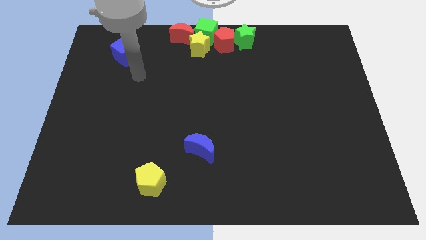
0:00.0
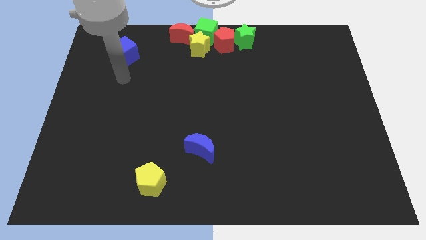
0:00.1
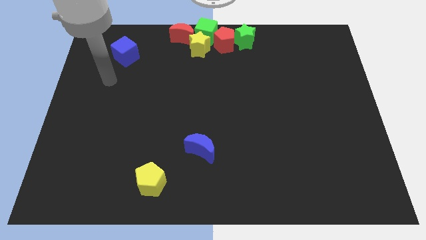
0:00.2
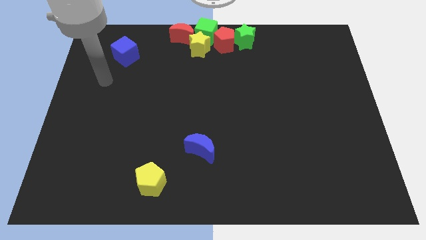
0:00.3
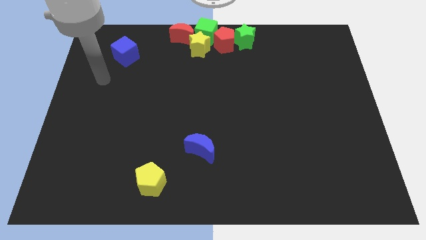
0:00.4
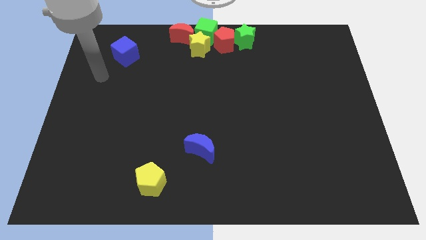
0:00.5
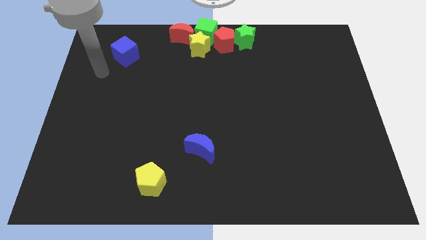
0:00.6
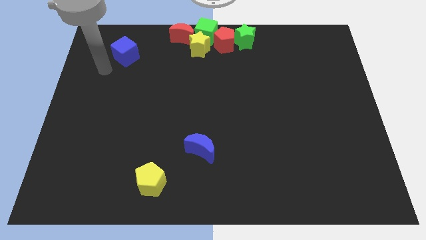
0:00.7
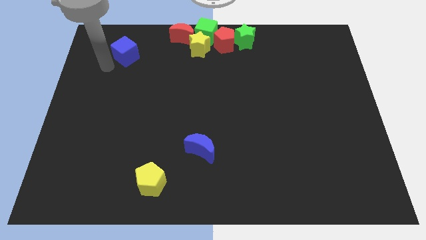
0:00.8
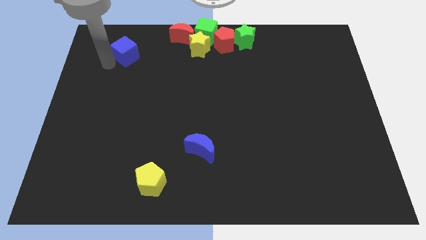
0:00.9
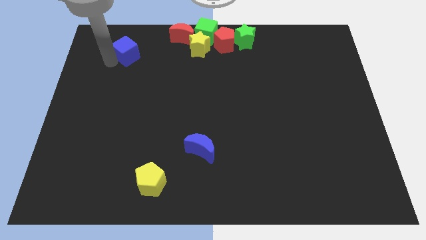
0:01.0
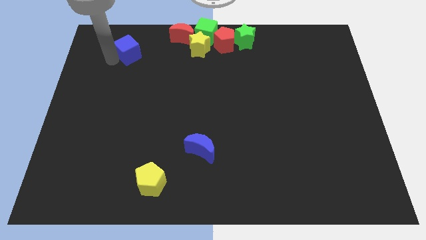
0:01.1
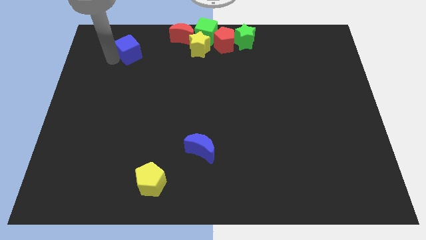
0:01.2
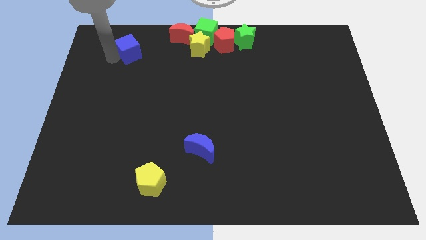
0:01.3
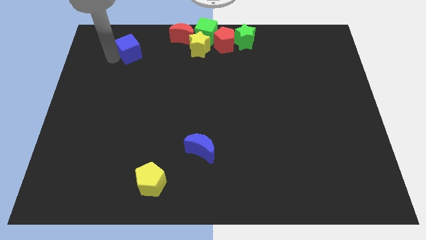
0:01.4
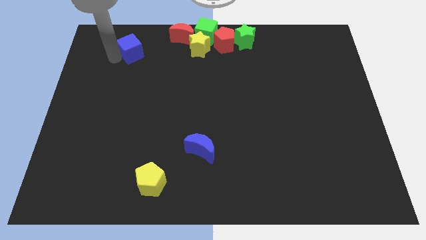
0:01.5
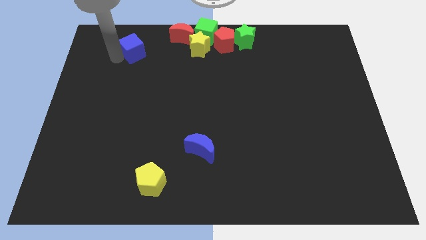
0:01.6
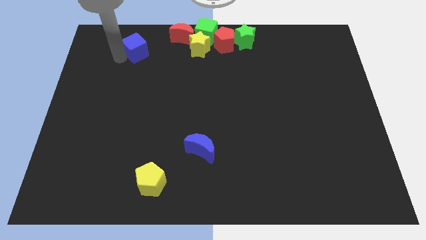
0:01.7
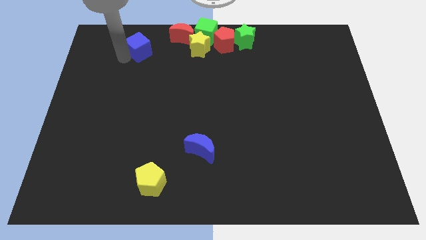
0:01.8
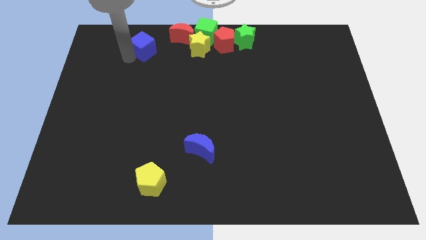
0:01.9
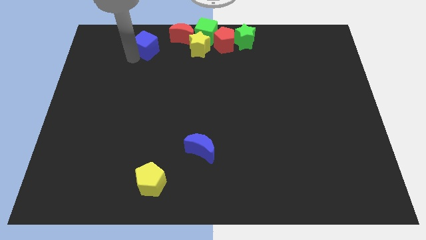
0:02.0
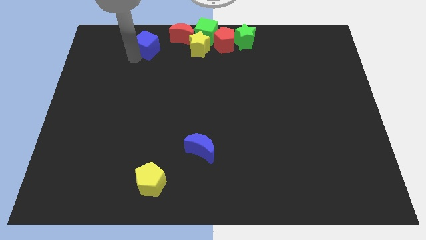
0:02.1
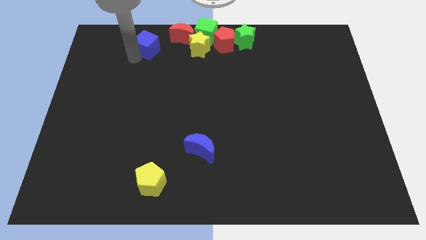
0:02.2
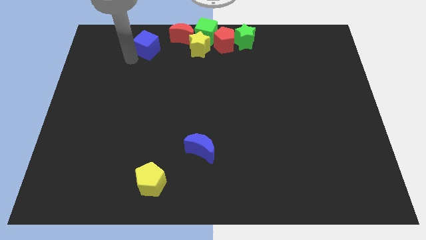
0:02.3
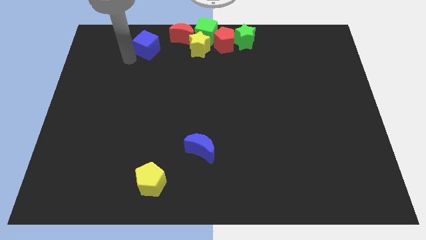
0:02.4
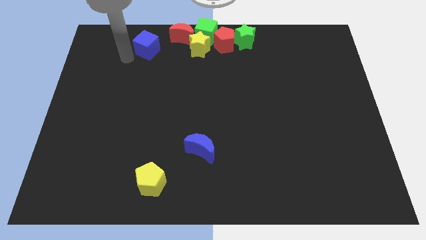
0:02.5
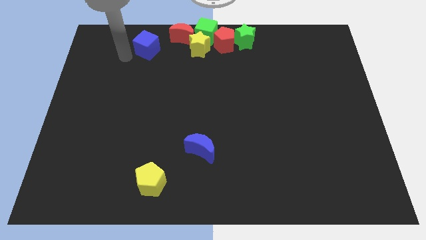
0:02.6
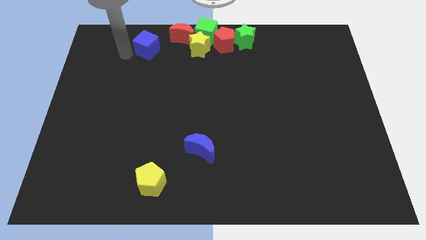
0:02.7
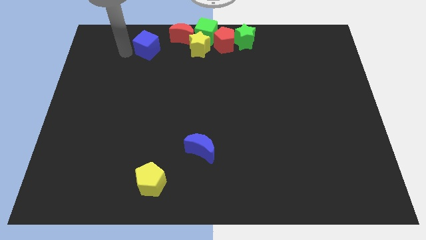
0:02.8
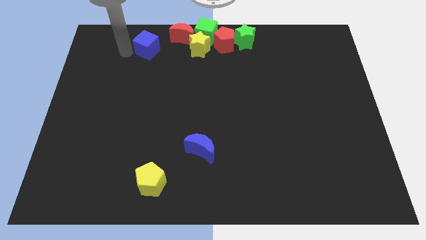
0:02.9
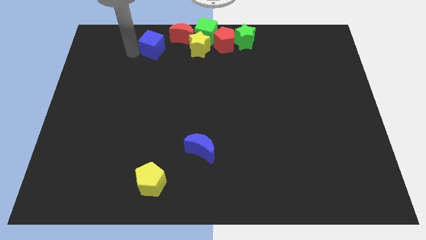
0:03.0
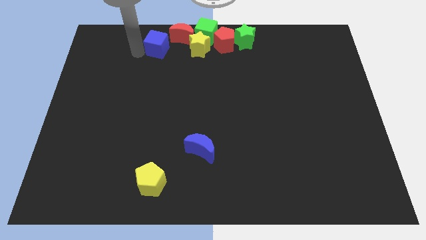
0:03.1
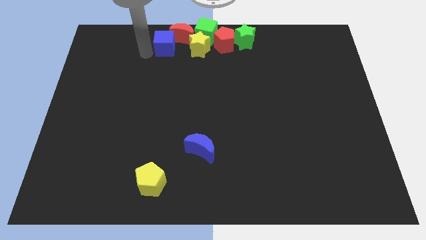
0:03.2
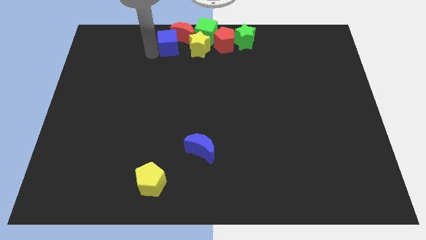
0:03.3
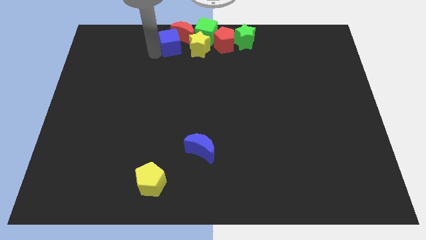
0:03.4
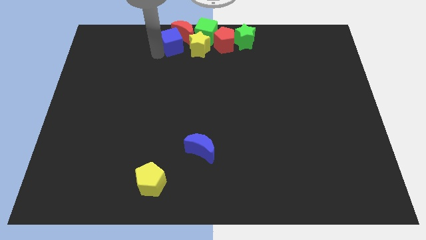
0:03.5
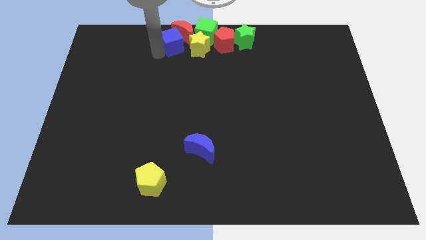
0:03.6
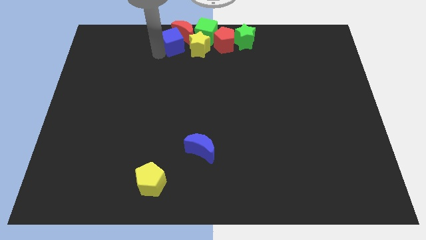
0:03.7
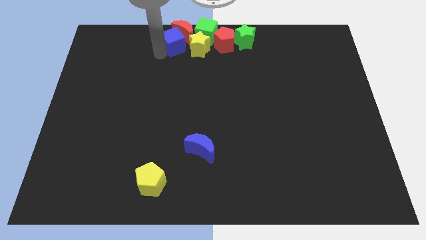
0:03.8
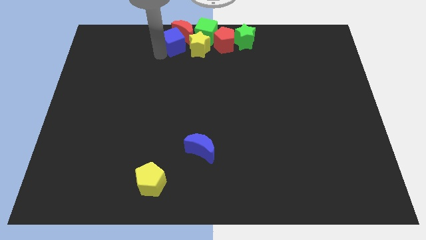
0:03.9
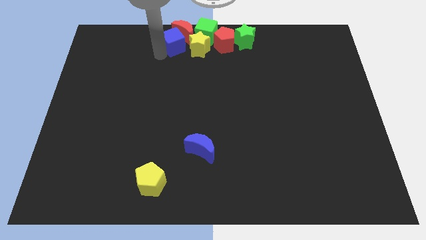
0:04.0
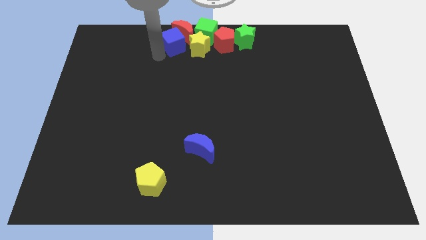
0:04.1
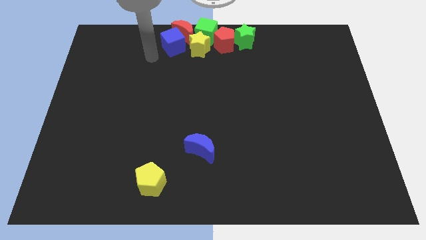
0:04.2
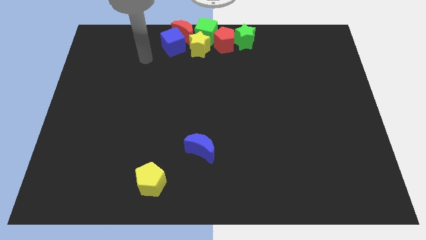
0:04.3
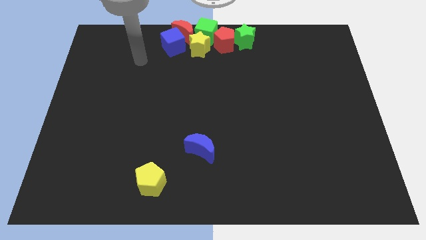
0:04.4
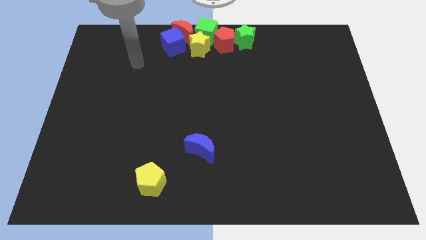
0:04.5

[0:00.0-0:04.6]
push the blue cube into the red moon

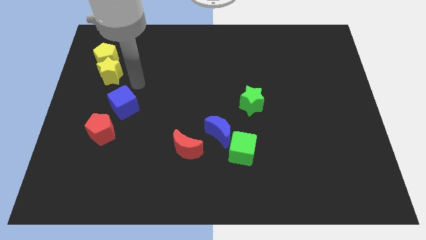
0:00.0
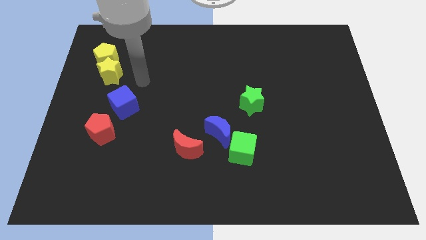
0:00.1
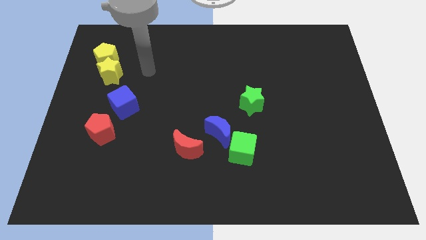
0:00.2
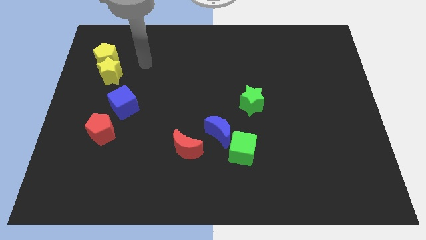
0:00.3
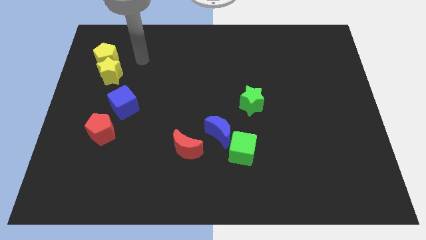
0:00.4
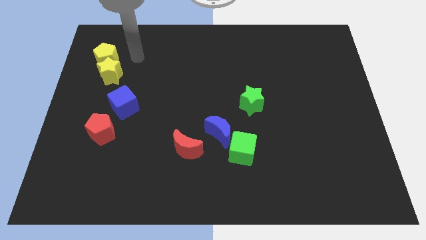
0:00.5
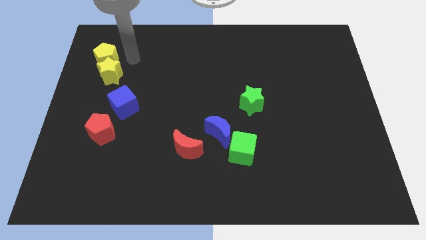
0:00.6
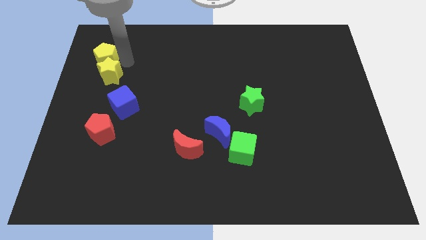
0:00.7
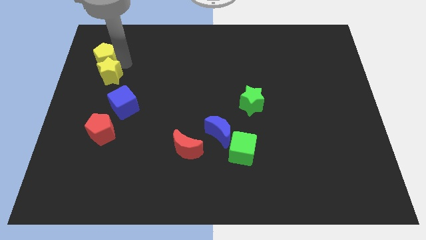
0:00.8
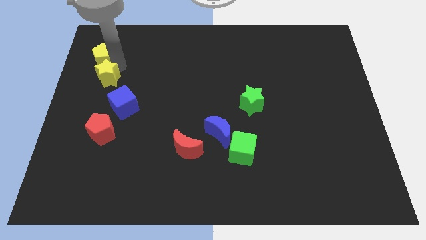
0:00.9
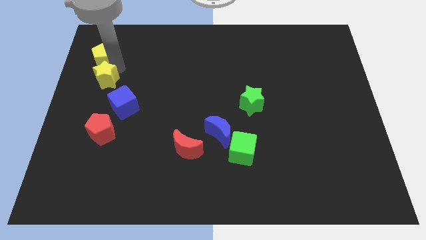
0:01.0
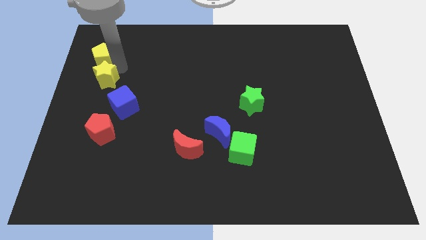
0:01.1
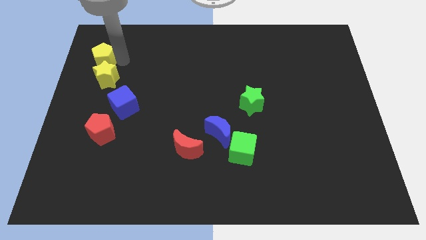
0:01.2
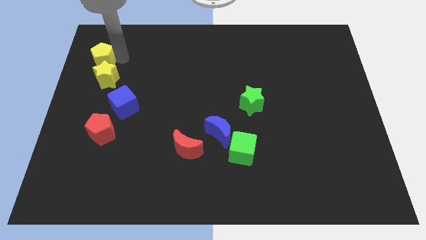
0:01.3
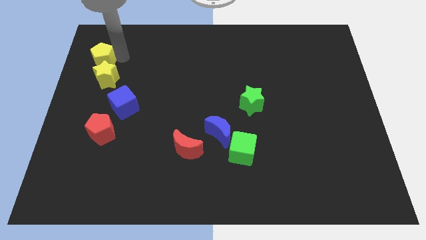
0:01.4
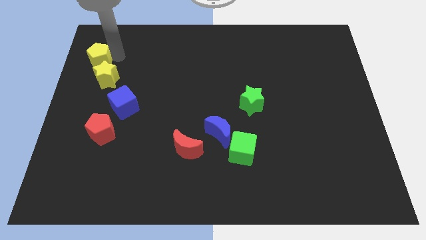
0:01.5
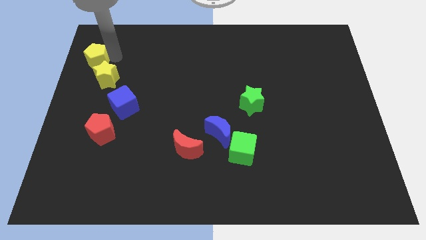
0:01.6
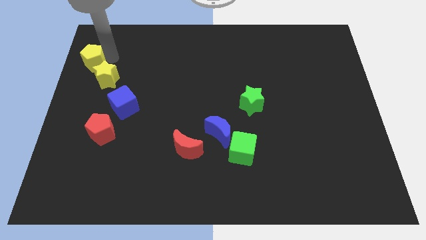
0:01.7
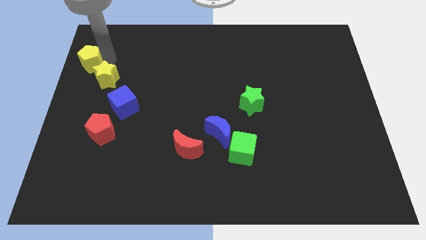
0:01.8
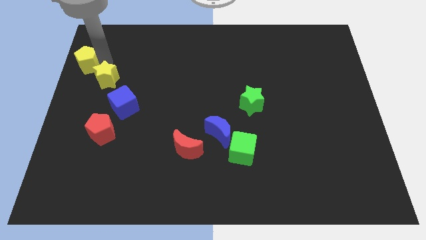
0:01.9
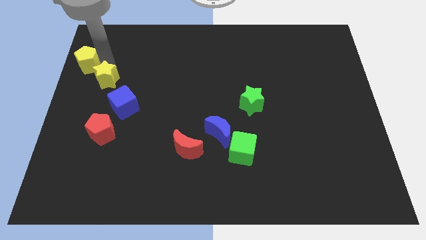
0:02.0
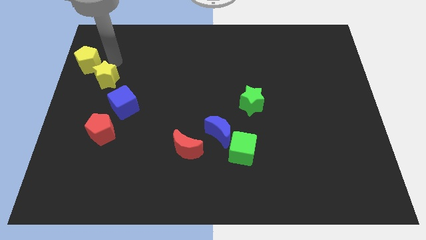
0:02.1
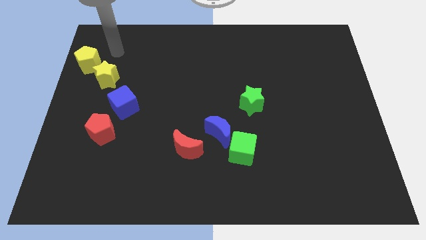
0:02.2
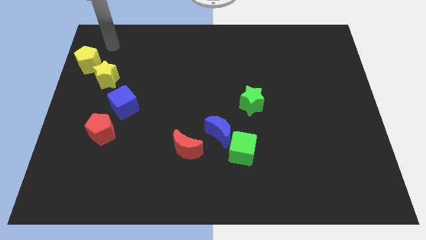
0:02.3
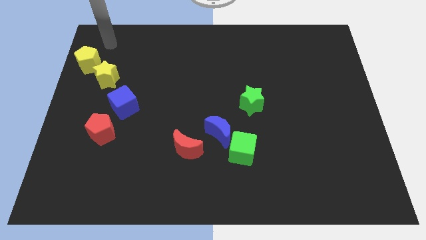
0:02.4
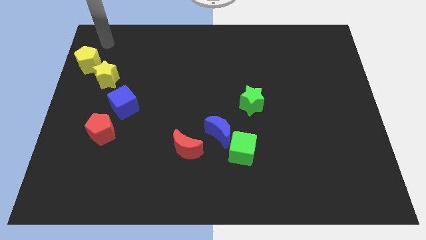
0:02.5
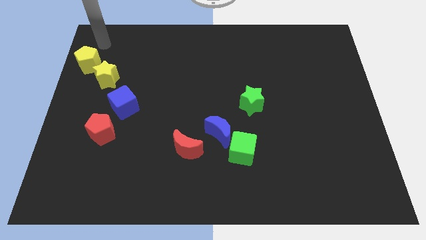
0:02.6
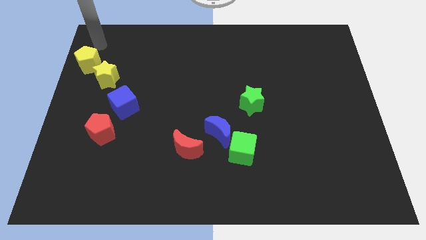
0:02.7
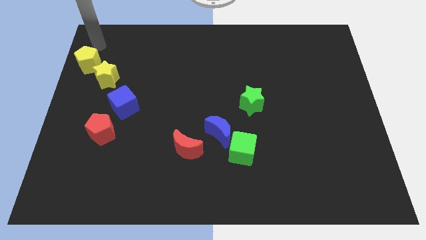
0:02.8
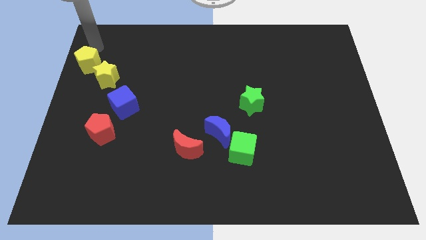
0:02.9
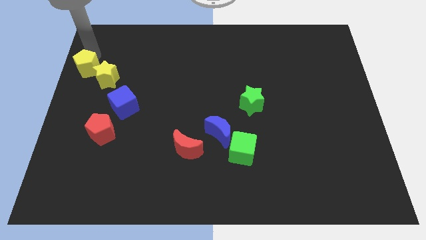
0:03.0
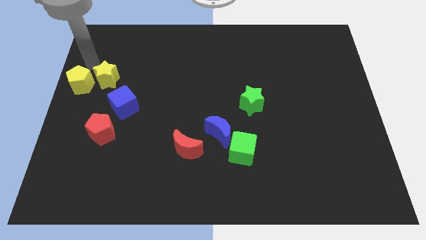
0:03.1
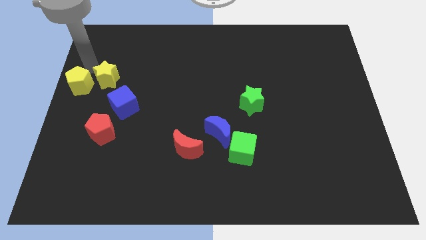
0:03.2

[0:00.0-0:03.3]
push the yellow pentagon to the left of the yellow star

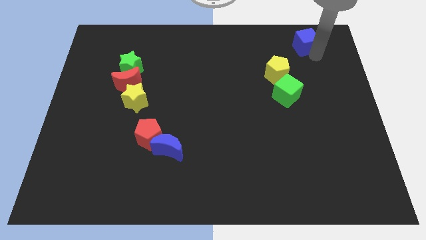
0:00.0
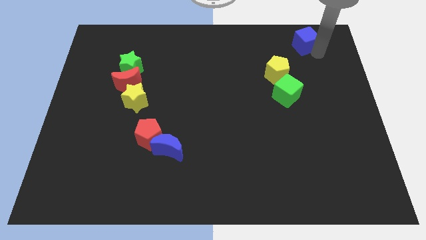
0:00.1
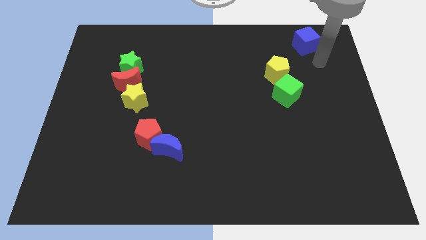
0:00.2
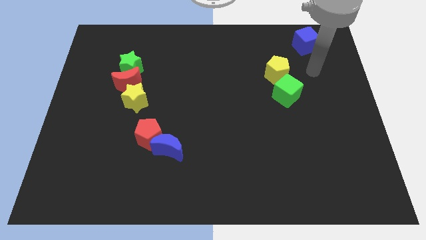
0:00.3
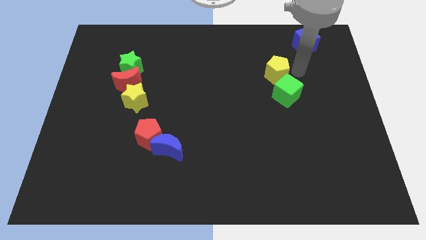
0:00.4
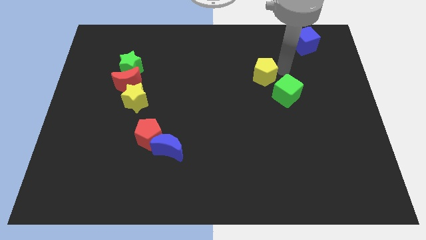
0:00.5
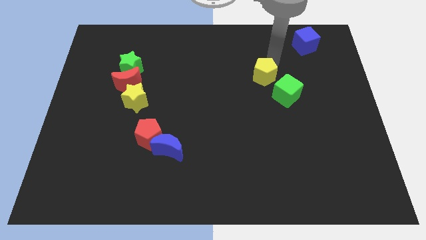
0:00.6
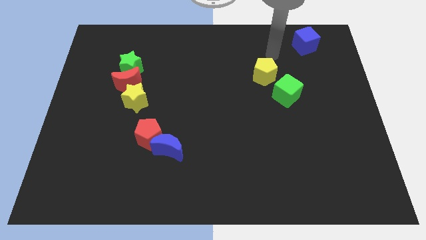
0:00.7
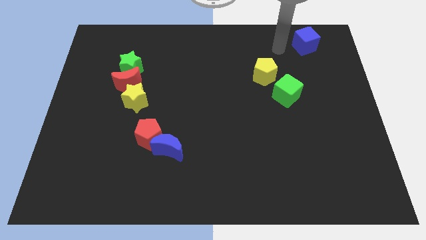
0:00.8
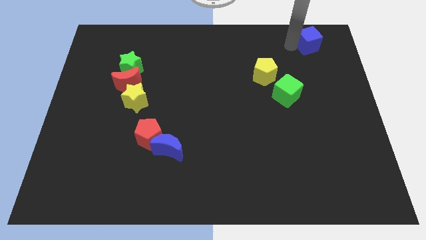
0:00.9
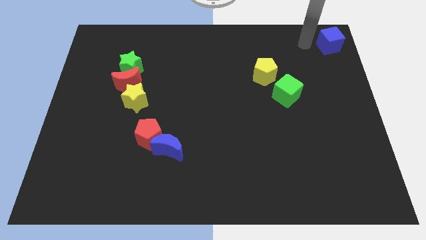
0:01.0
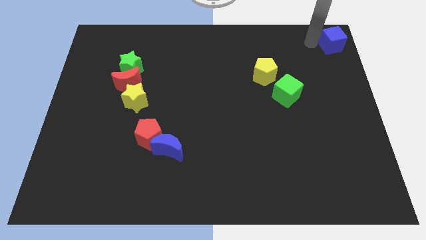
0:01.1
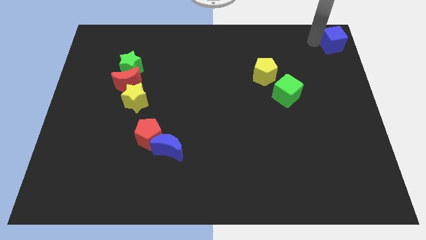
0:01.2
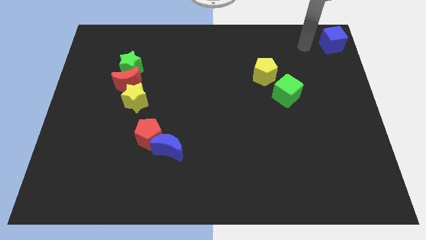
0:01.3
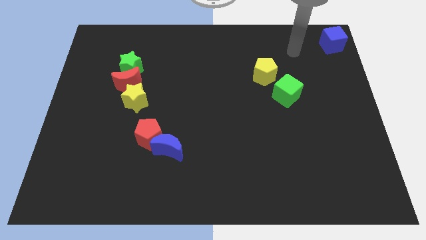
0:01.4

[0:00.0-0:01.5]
push the blue cube to the top right corner of the board
